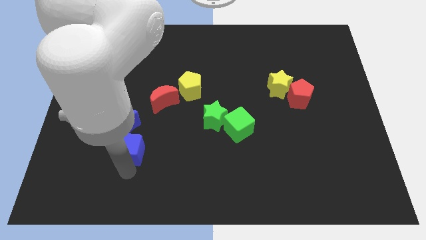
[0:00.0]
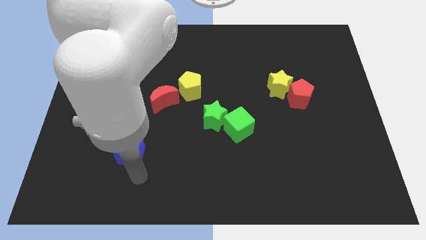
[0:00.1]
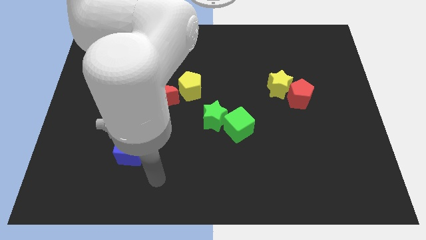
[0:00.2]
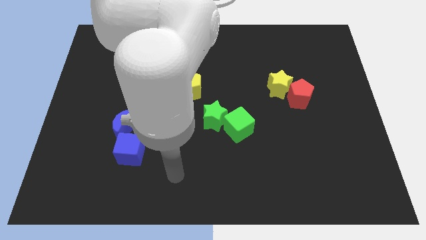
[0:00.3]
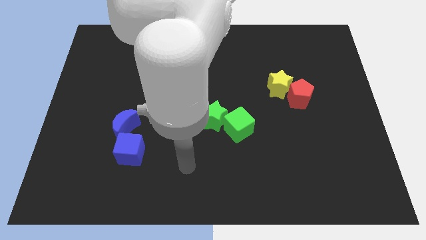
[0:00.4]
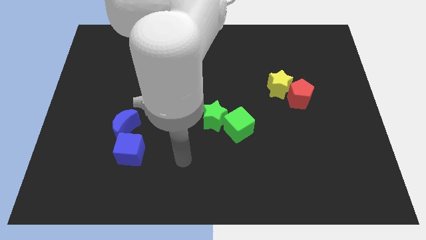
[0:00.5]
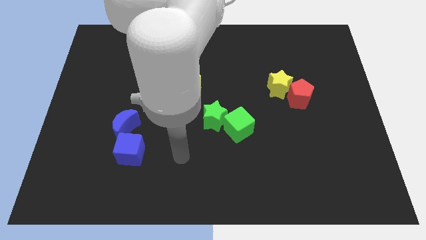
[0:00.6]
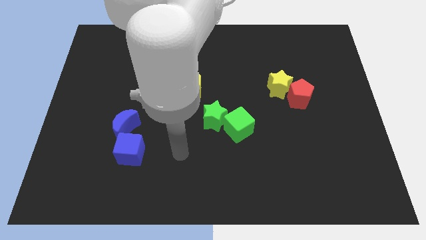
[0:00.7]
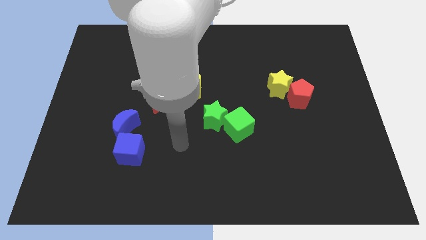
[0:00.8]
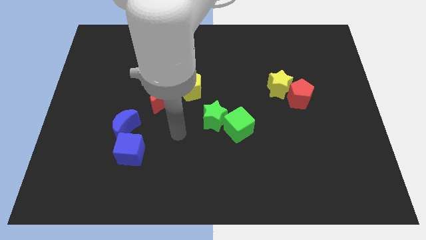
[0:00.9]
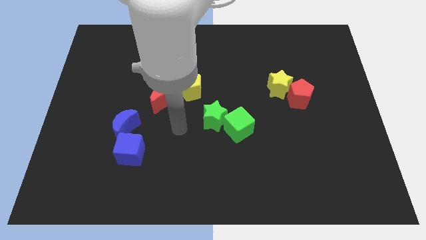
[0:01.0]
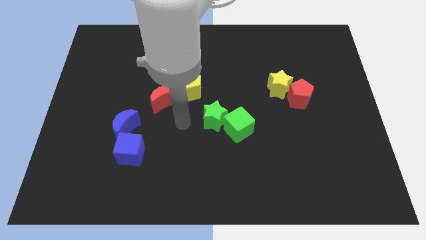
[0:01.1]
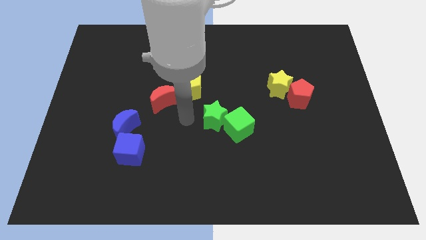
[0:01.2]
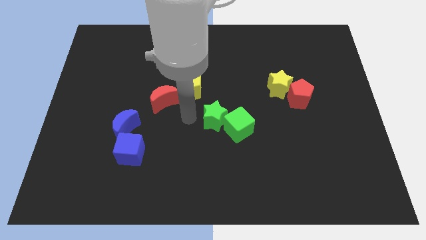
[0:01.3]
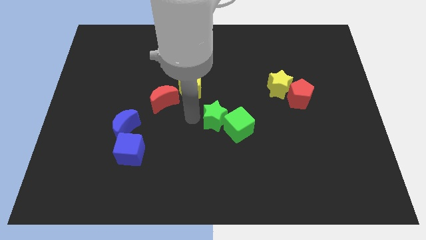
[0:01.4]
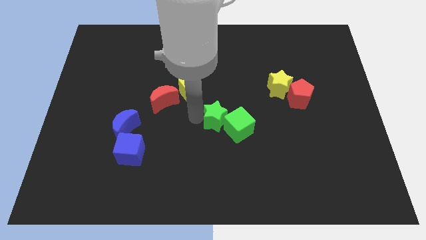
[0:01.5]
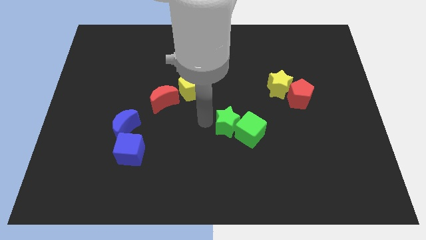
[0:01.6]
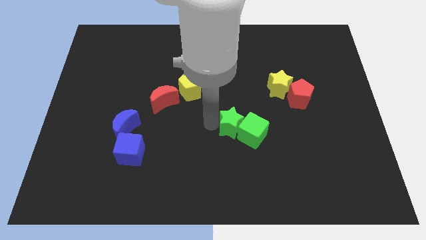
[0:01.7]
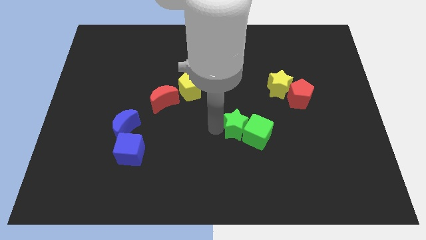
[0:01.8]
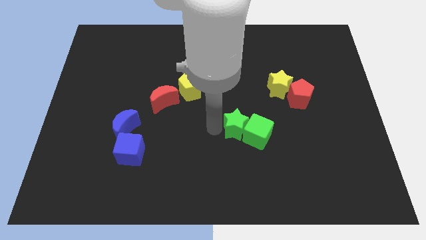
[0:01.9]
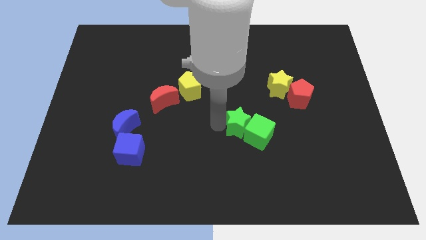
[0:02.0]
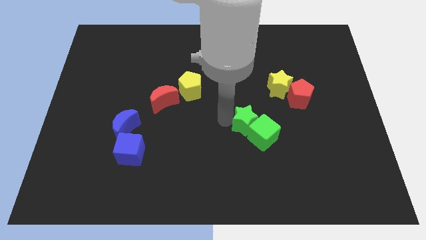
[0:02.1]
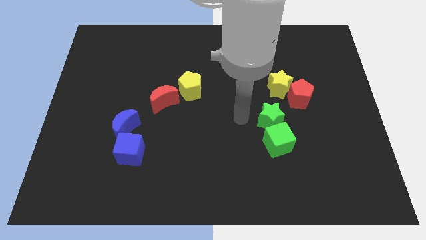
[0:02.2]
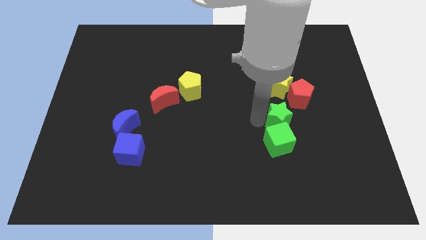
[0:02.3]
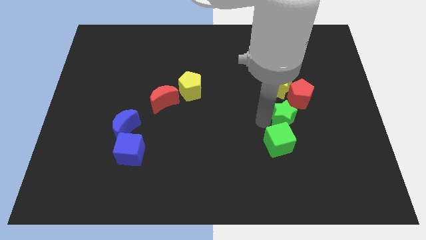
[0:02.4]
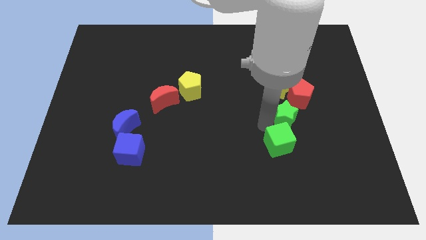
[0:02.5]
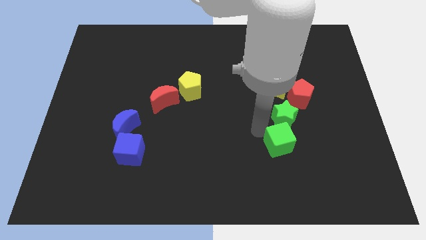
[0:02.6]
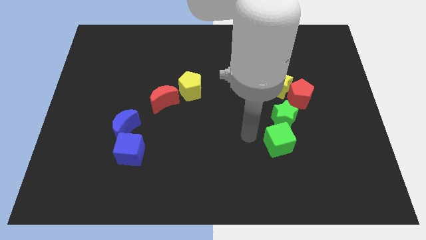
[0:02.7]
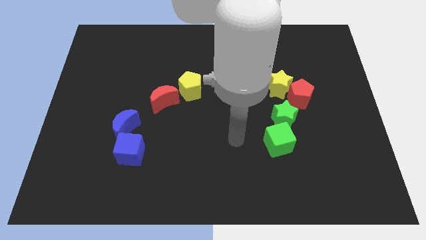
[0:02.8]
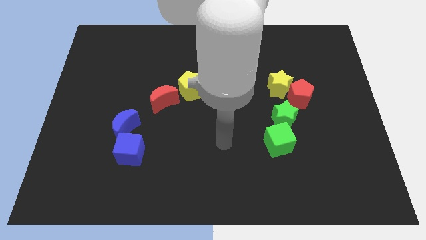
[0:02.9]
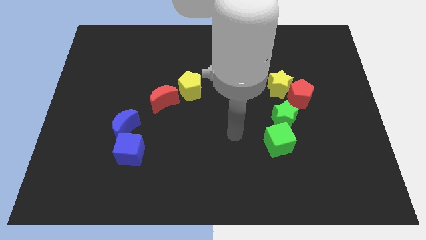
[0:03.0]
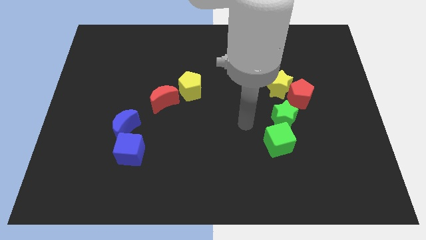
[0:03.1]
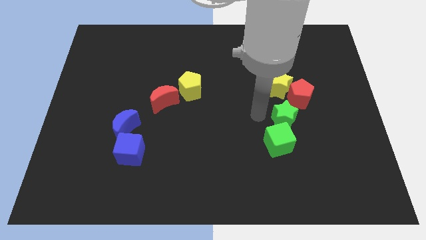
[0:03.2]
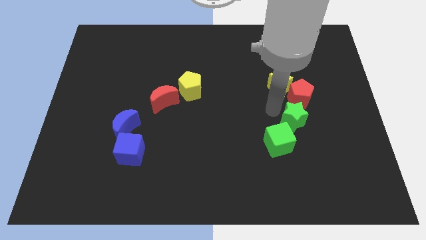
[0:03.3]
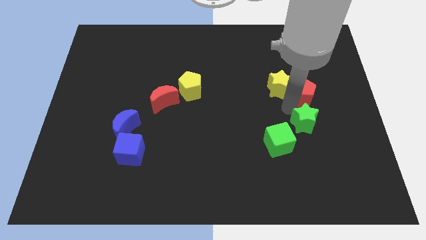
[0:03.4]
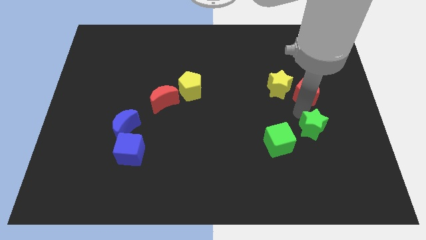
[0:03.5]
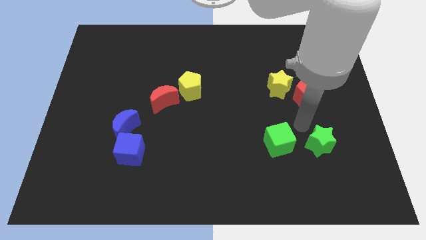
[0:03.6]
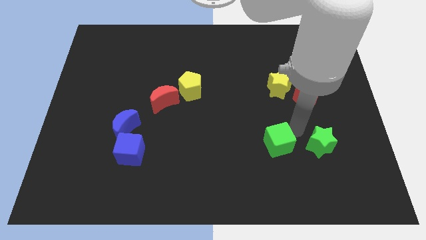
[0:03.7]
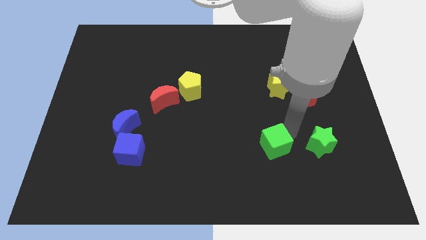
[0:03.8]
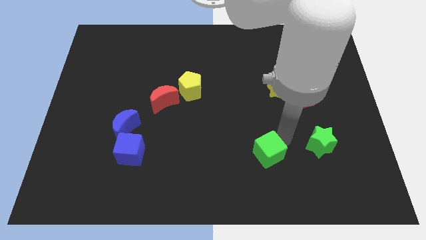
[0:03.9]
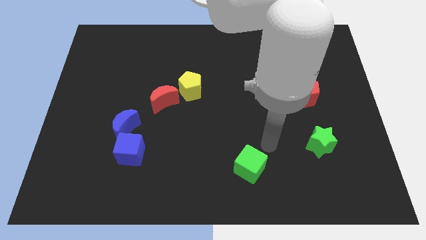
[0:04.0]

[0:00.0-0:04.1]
make both the green blocks diagonal to each other

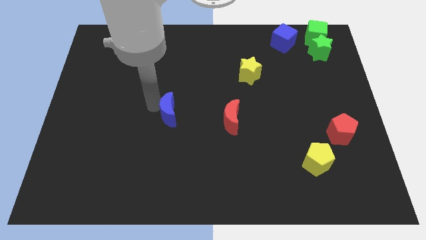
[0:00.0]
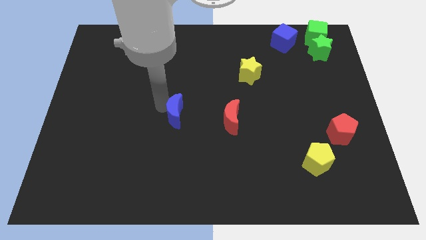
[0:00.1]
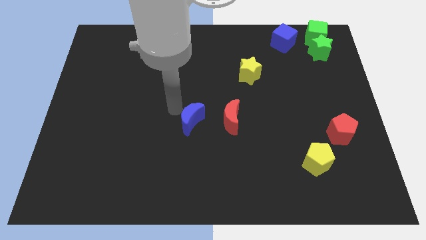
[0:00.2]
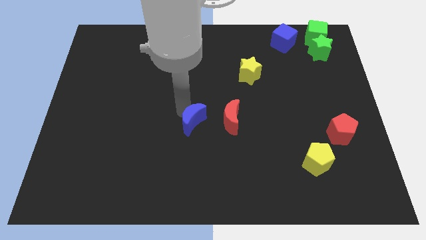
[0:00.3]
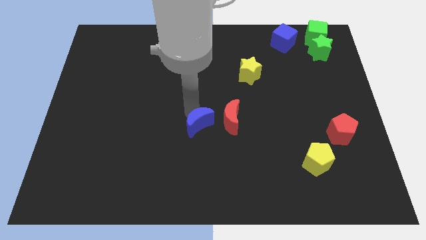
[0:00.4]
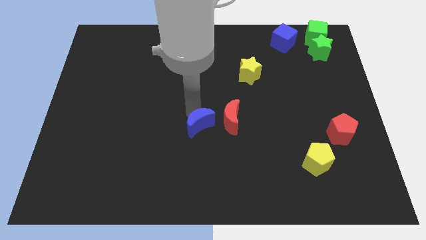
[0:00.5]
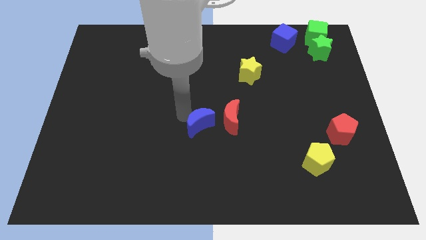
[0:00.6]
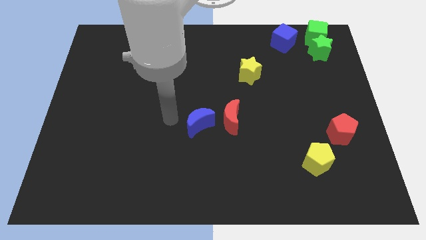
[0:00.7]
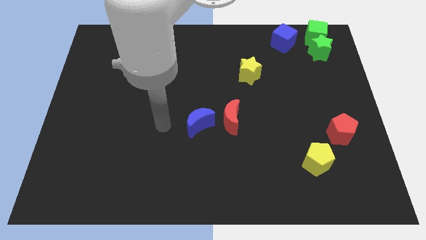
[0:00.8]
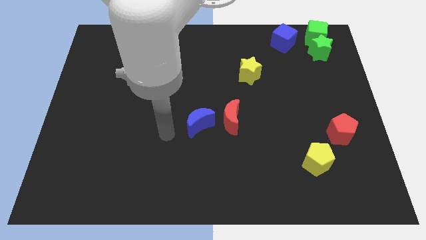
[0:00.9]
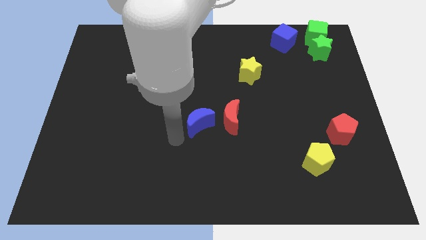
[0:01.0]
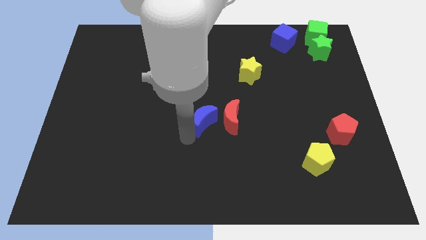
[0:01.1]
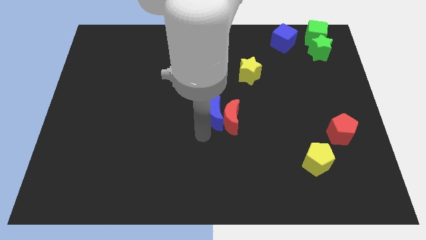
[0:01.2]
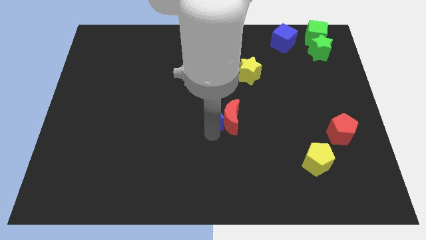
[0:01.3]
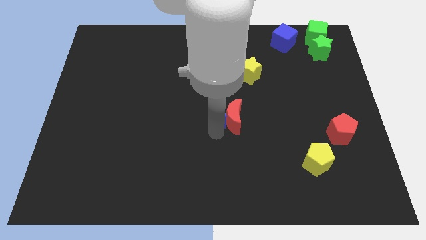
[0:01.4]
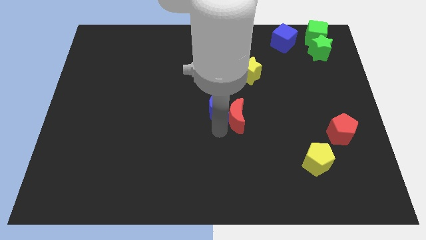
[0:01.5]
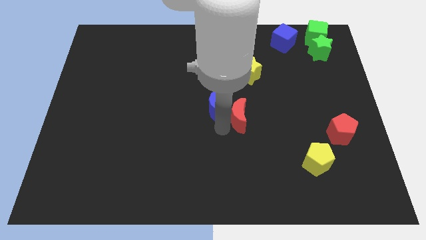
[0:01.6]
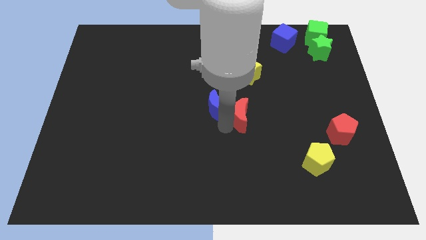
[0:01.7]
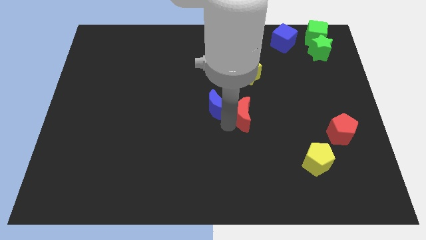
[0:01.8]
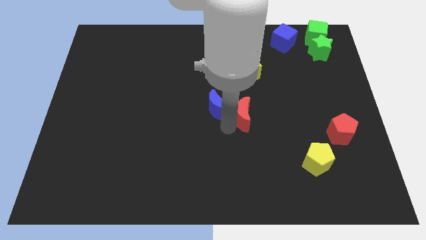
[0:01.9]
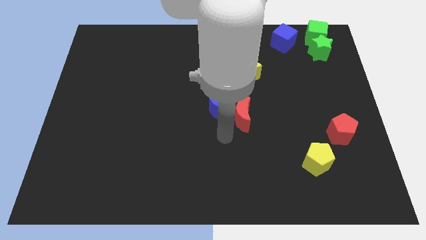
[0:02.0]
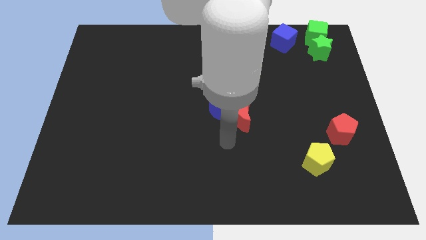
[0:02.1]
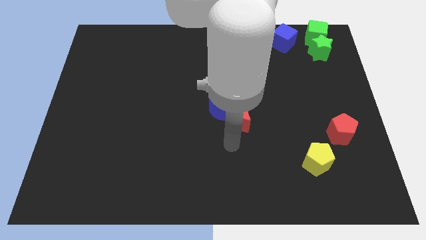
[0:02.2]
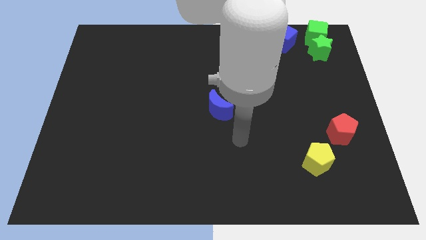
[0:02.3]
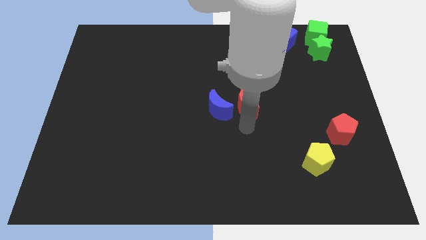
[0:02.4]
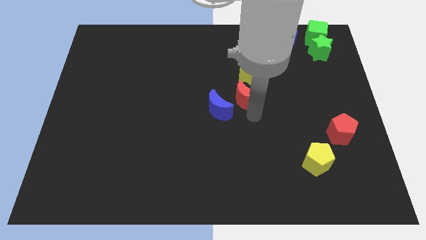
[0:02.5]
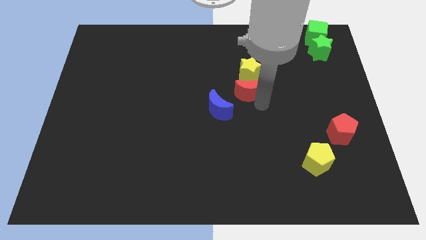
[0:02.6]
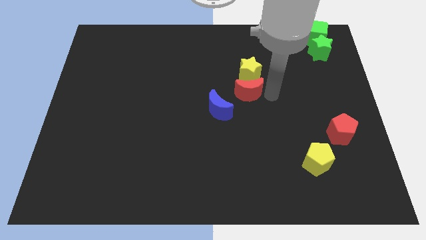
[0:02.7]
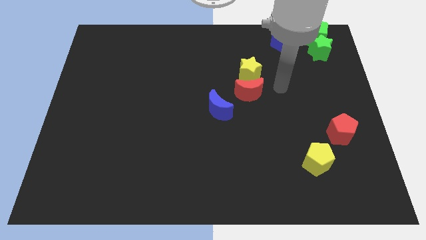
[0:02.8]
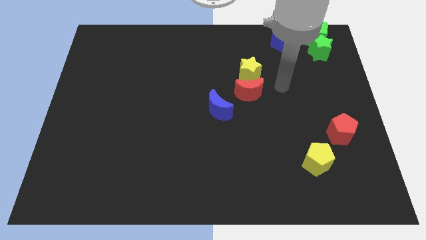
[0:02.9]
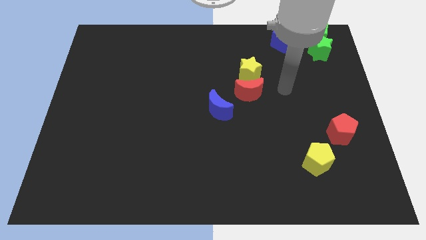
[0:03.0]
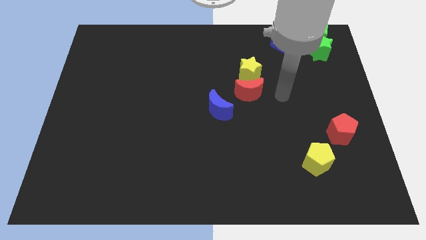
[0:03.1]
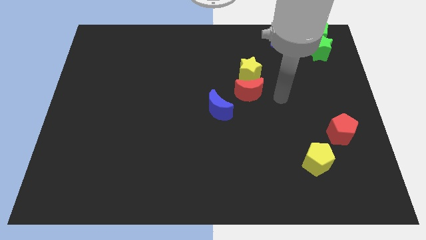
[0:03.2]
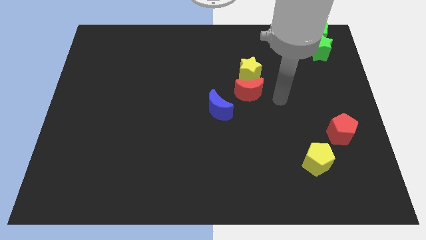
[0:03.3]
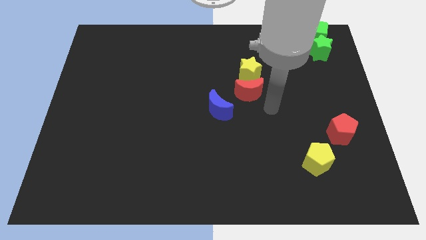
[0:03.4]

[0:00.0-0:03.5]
push the red moon vertically at the bottom of the yellow star

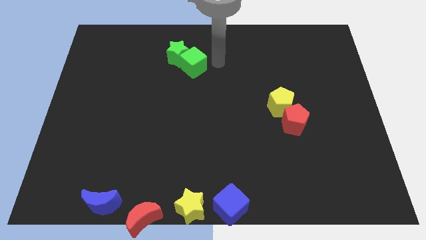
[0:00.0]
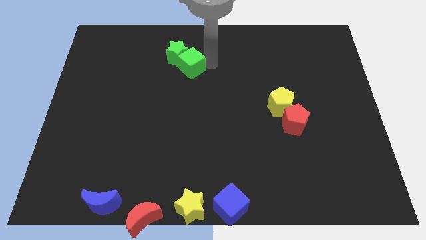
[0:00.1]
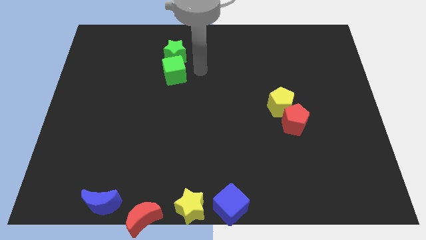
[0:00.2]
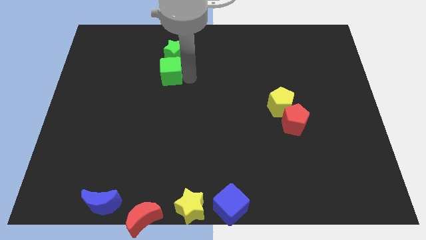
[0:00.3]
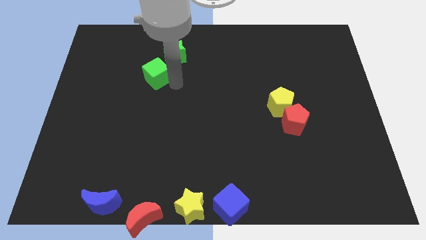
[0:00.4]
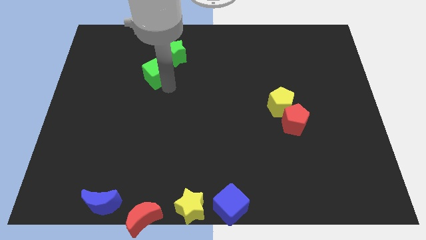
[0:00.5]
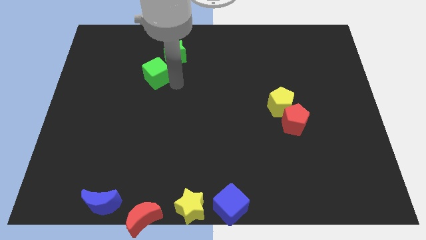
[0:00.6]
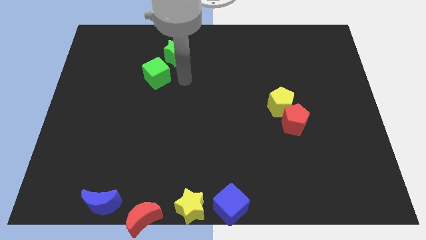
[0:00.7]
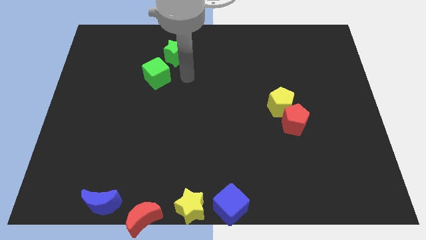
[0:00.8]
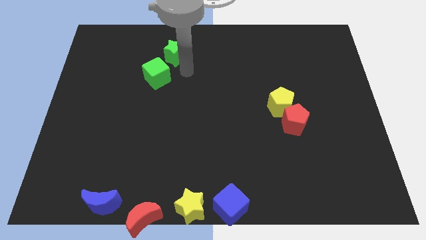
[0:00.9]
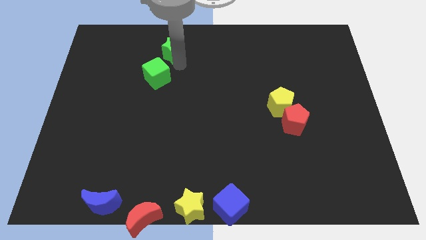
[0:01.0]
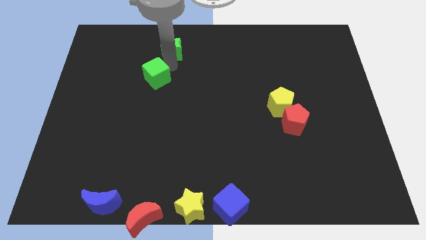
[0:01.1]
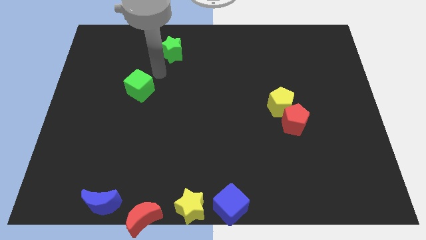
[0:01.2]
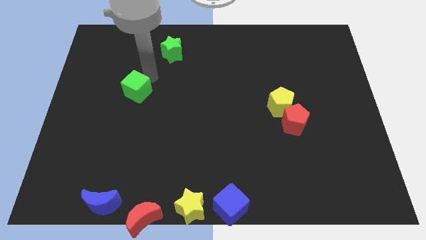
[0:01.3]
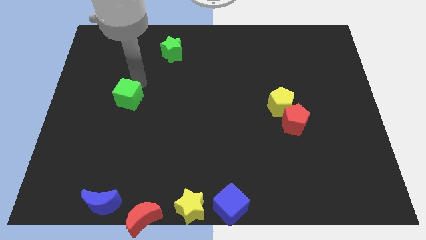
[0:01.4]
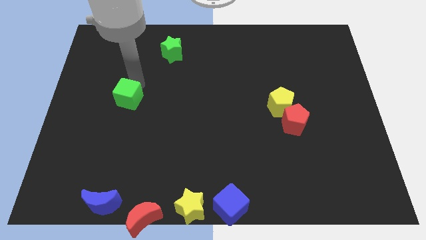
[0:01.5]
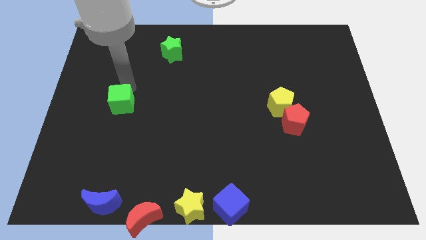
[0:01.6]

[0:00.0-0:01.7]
move green cube away from the green star
